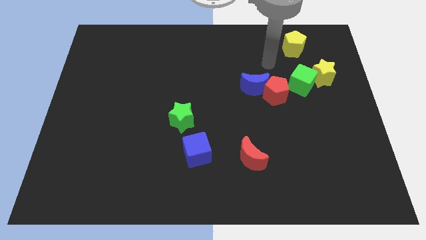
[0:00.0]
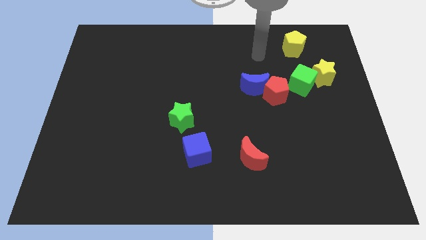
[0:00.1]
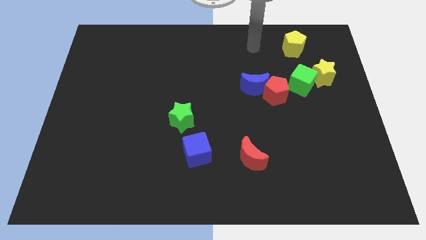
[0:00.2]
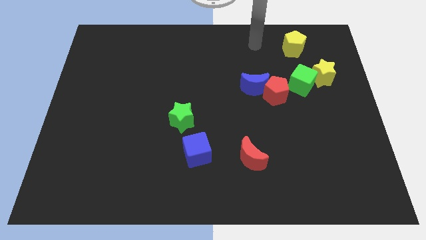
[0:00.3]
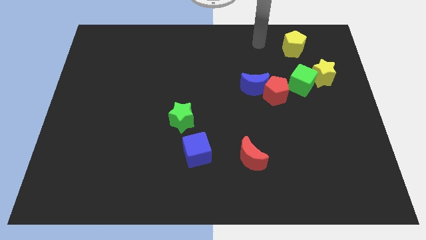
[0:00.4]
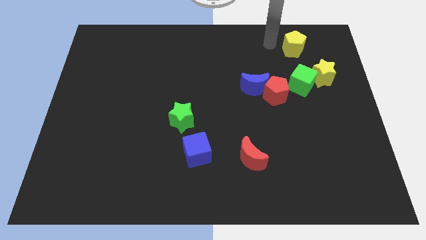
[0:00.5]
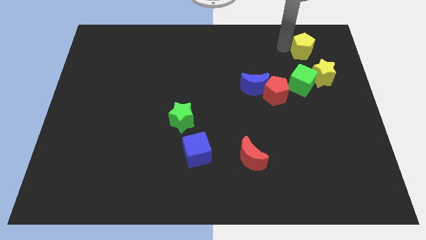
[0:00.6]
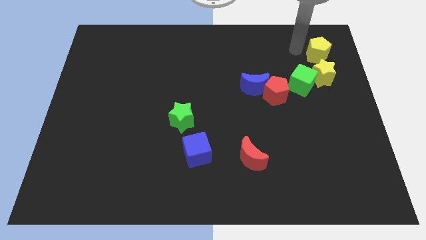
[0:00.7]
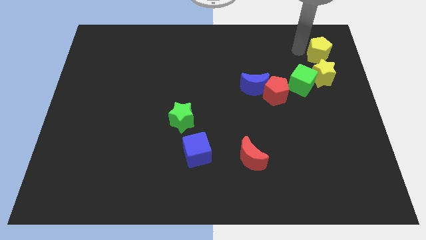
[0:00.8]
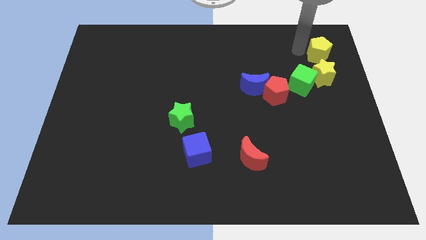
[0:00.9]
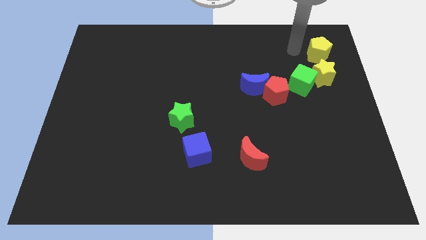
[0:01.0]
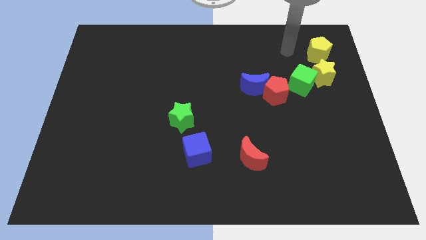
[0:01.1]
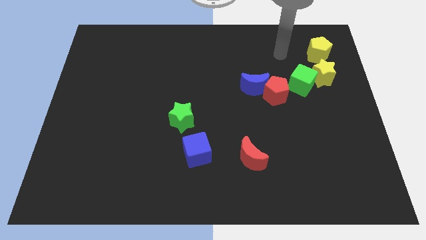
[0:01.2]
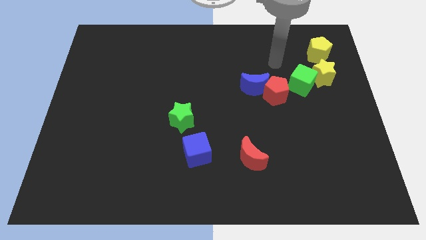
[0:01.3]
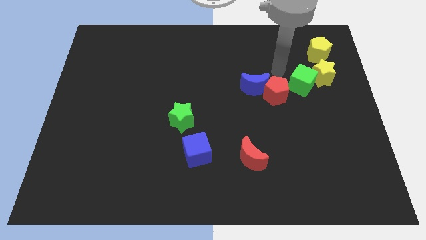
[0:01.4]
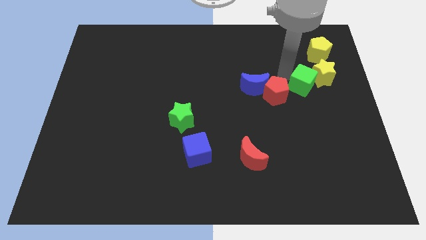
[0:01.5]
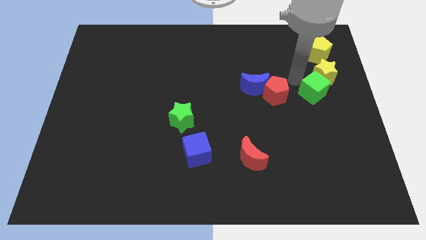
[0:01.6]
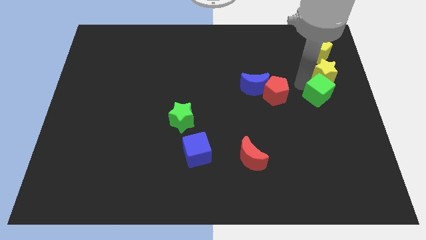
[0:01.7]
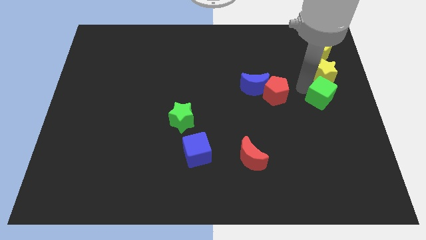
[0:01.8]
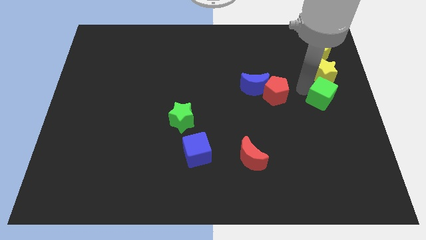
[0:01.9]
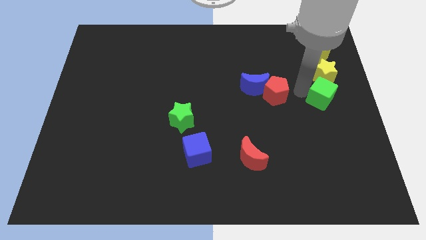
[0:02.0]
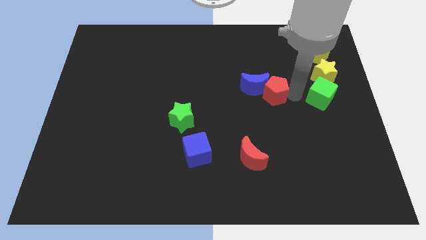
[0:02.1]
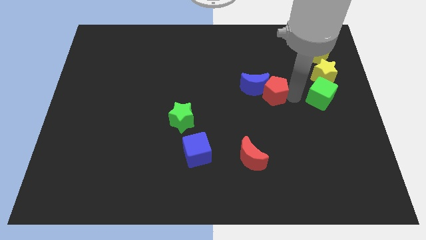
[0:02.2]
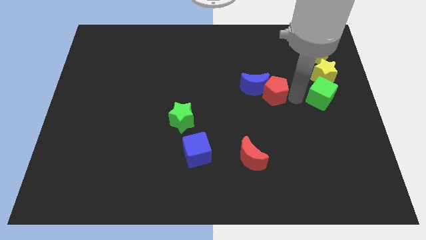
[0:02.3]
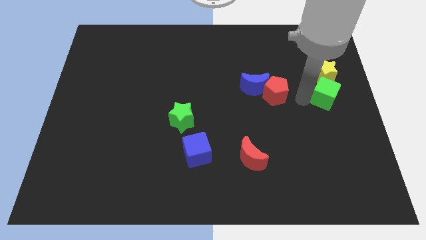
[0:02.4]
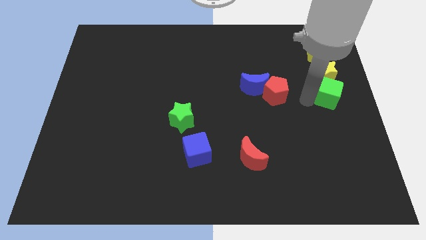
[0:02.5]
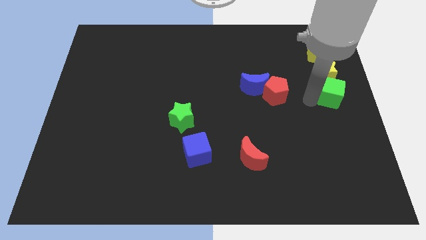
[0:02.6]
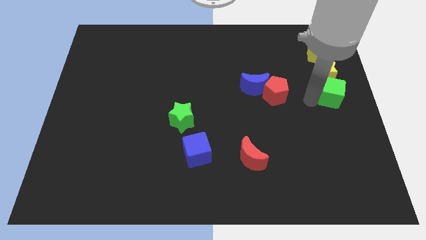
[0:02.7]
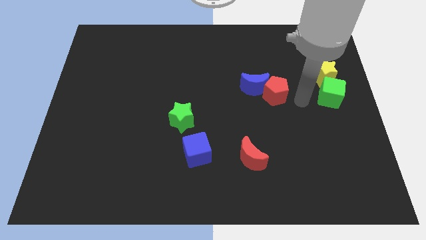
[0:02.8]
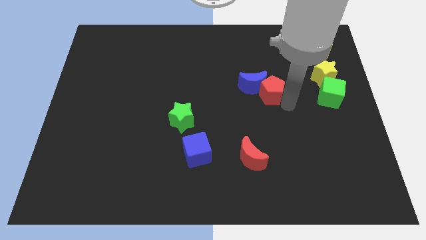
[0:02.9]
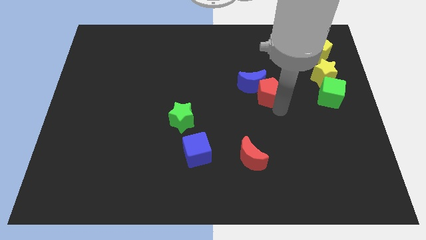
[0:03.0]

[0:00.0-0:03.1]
move the yellow pentagon and green cube towards right

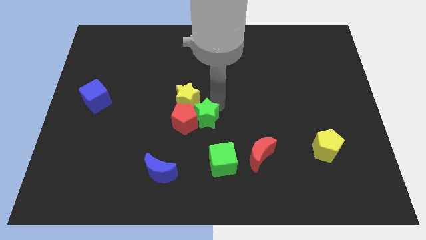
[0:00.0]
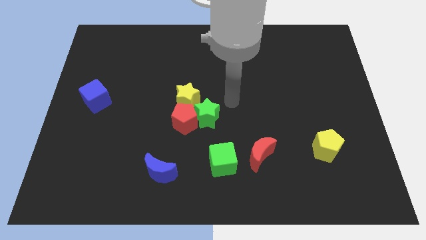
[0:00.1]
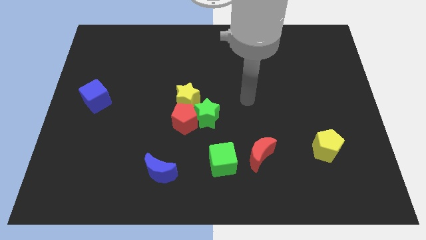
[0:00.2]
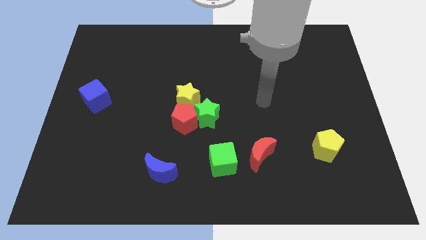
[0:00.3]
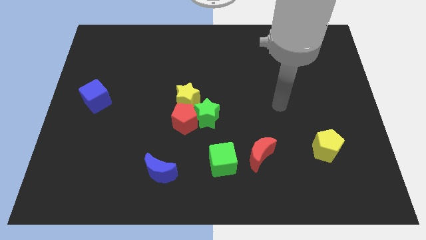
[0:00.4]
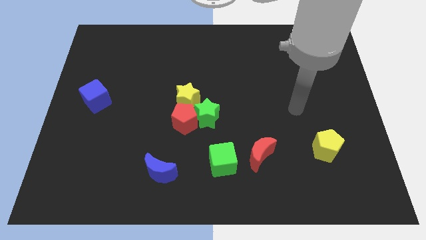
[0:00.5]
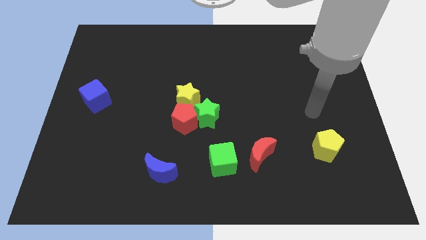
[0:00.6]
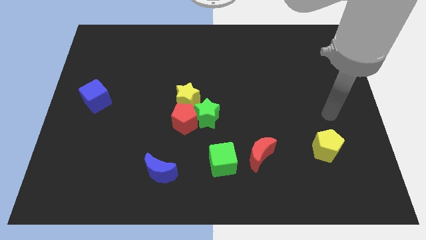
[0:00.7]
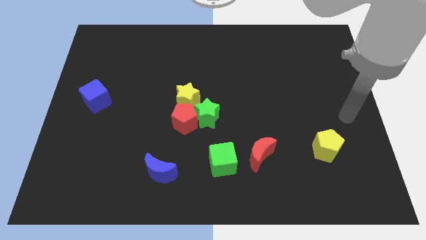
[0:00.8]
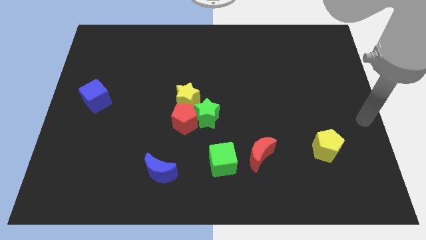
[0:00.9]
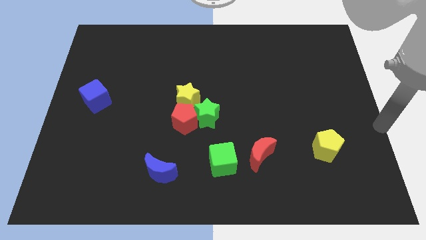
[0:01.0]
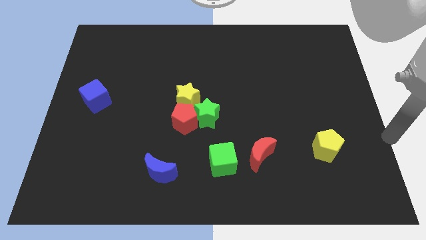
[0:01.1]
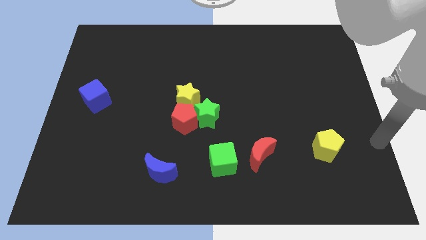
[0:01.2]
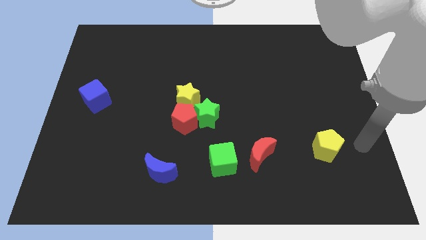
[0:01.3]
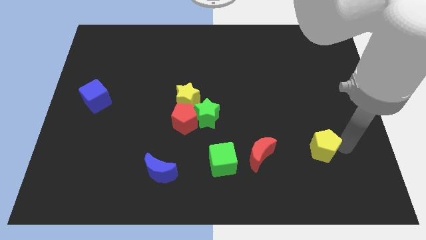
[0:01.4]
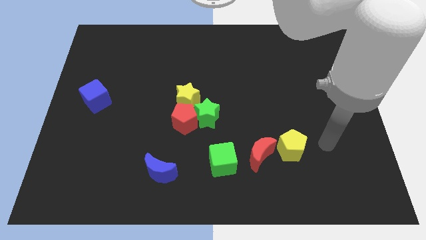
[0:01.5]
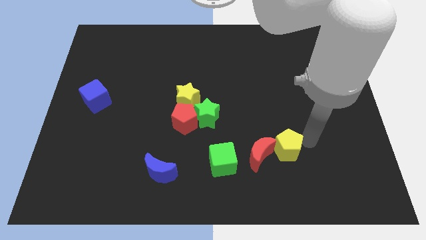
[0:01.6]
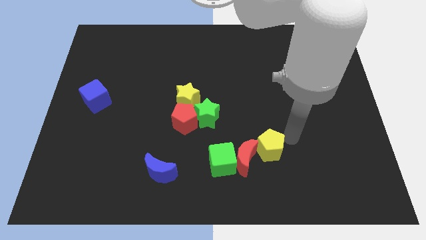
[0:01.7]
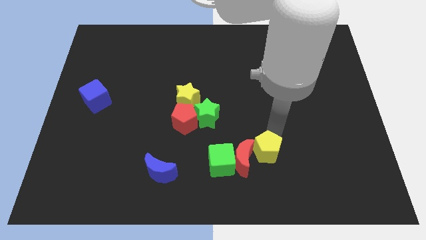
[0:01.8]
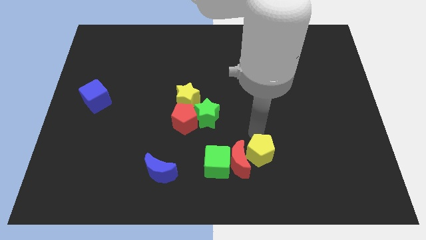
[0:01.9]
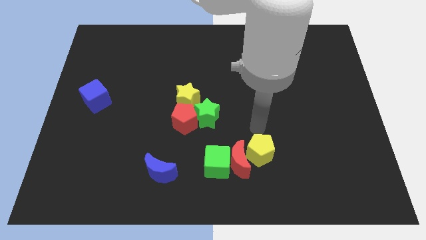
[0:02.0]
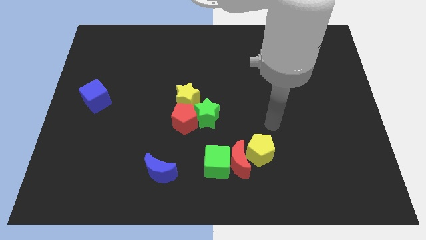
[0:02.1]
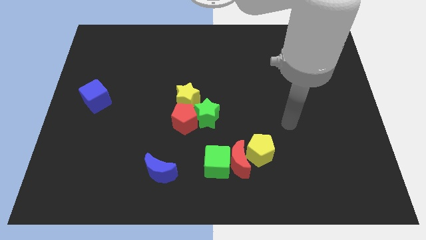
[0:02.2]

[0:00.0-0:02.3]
place the yellow pentagon towards the right side of the red moon

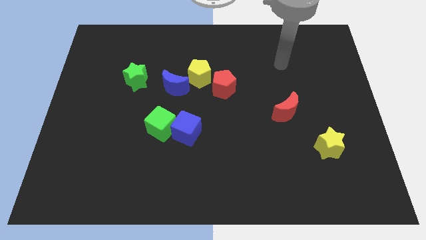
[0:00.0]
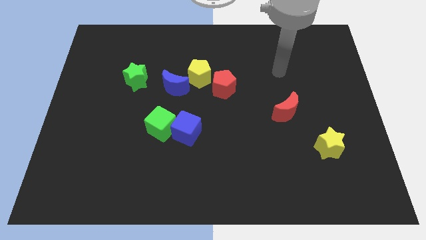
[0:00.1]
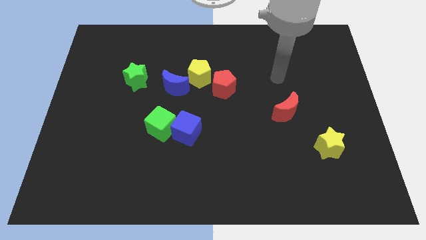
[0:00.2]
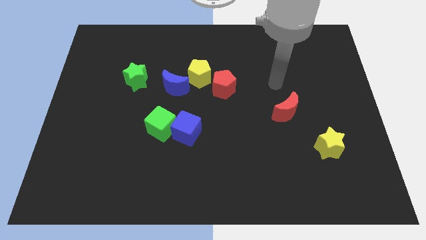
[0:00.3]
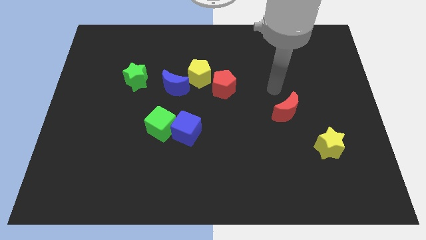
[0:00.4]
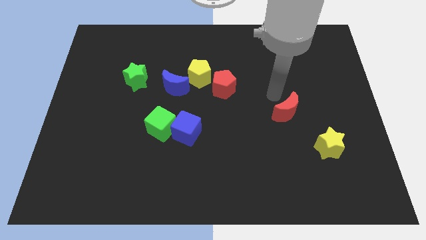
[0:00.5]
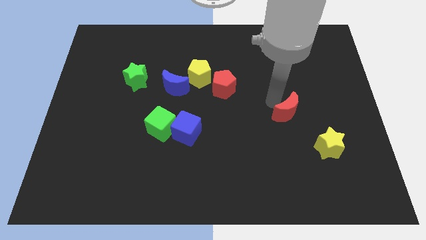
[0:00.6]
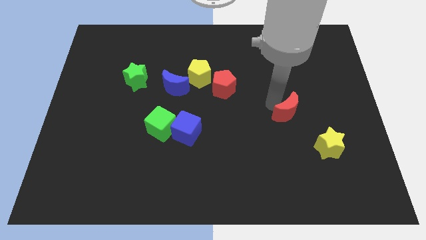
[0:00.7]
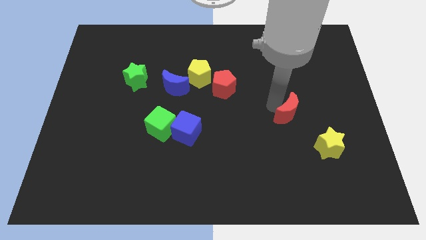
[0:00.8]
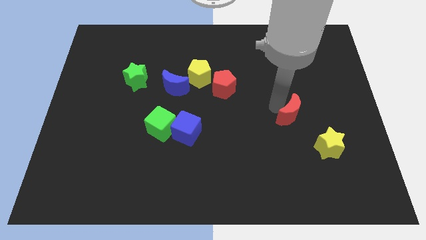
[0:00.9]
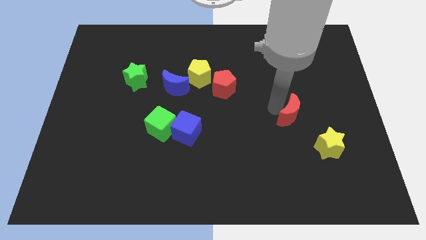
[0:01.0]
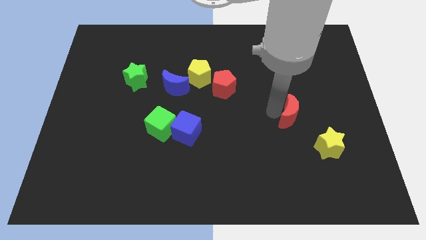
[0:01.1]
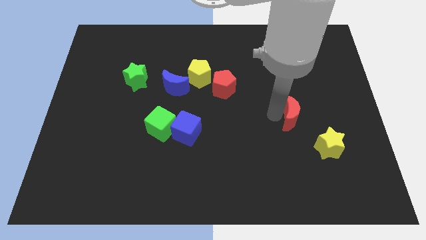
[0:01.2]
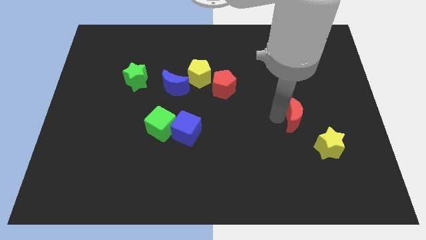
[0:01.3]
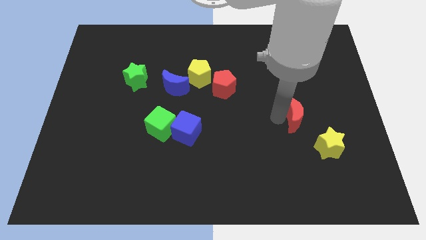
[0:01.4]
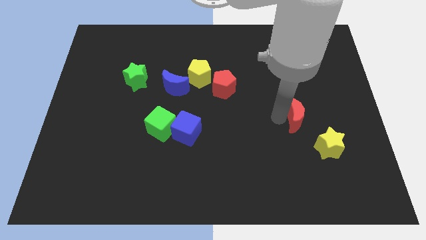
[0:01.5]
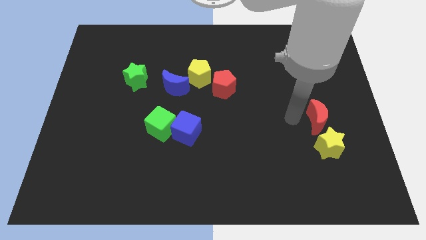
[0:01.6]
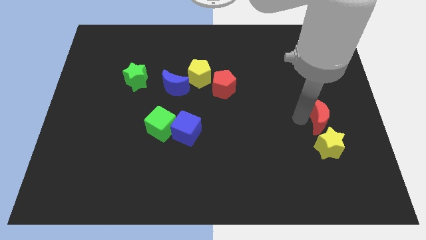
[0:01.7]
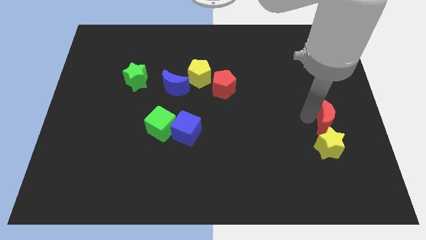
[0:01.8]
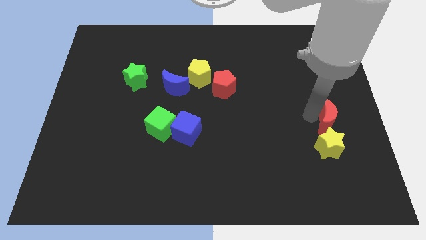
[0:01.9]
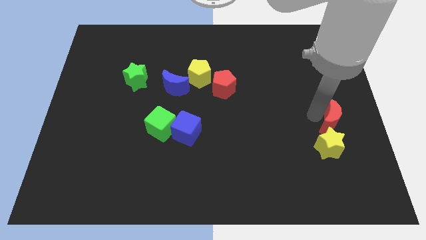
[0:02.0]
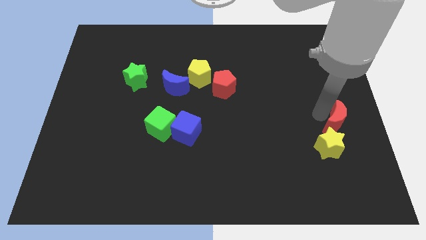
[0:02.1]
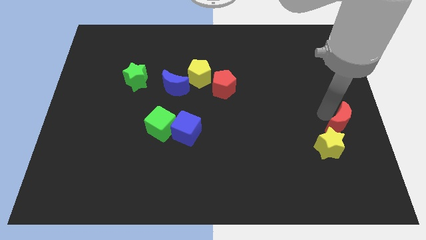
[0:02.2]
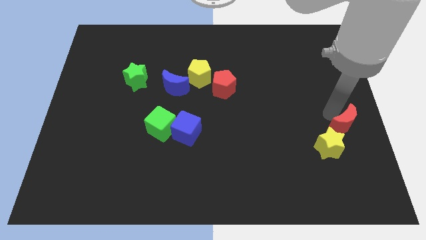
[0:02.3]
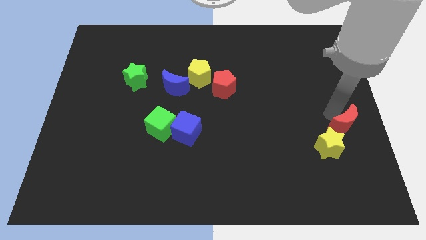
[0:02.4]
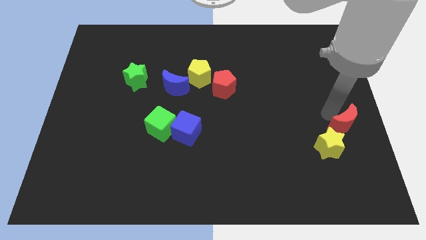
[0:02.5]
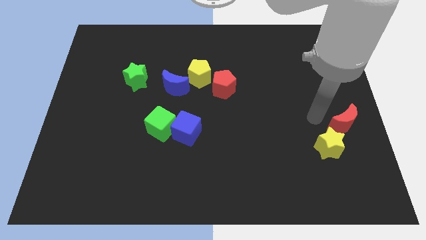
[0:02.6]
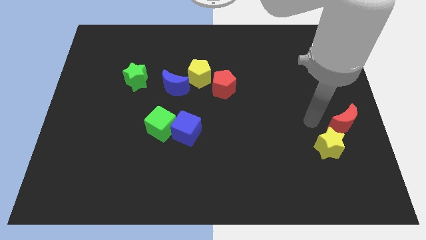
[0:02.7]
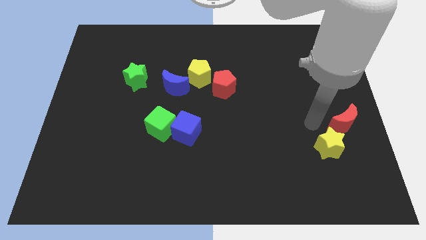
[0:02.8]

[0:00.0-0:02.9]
place red crescent above yellow star

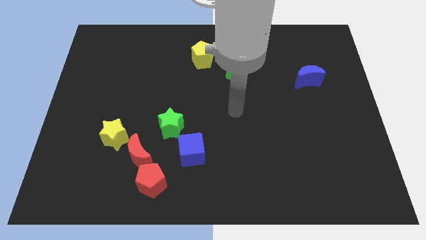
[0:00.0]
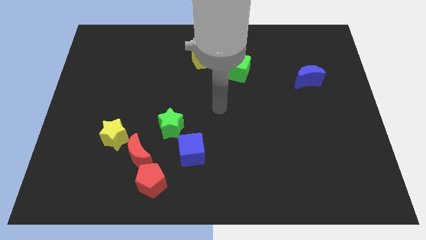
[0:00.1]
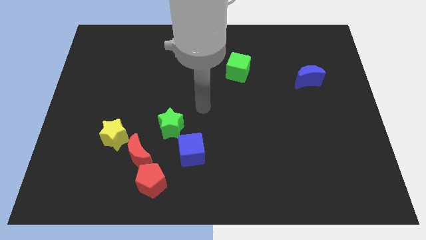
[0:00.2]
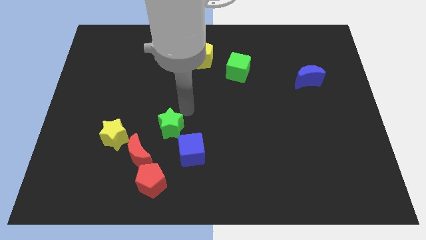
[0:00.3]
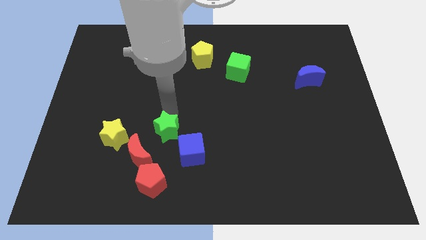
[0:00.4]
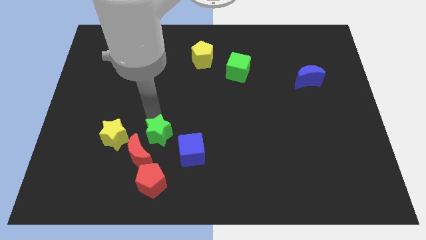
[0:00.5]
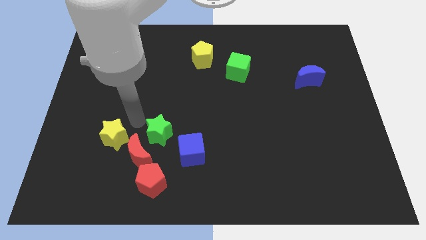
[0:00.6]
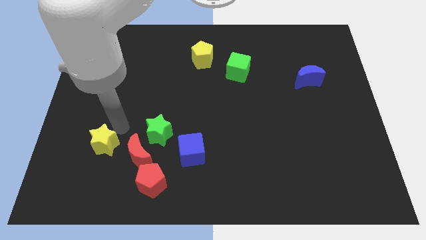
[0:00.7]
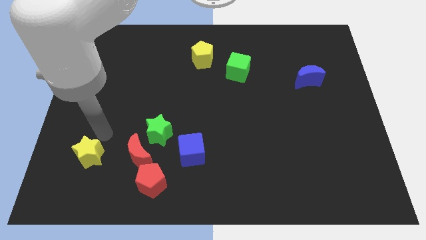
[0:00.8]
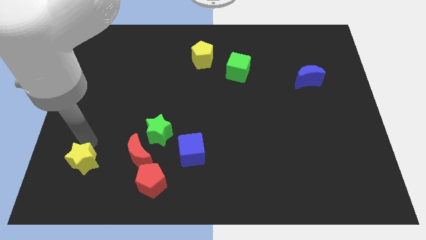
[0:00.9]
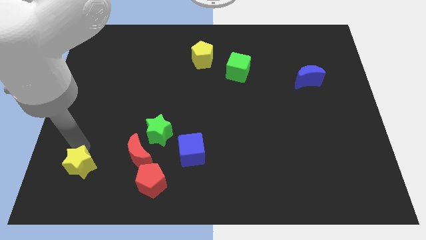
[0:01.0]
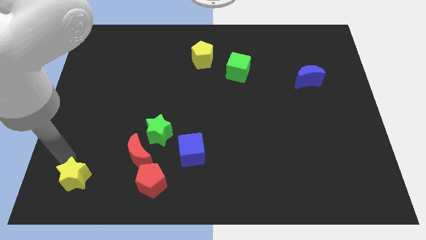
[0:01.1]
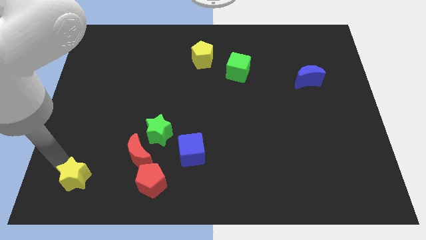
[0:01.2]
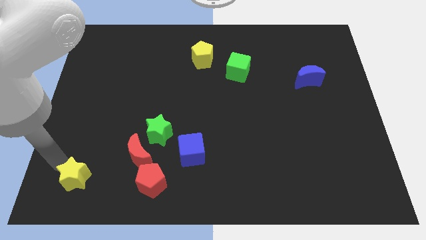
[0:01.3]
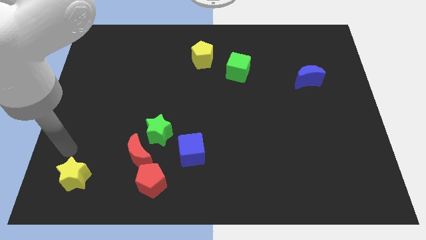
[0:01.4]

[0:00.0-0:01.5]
move the yellow star to the left of the red pentagon
